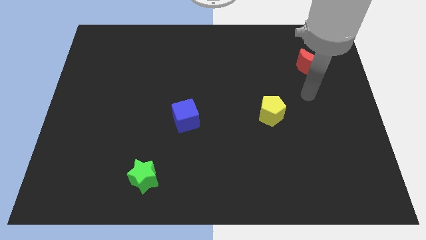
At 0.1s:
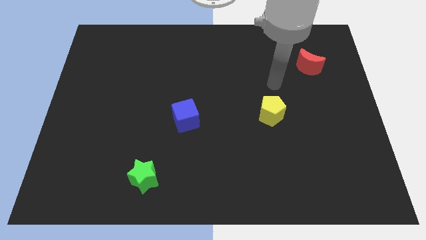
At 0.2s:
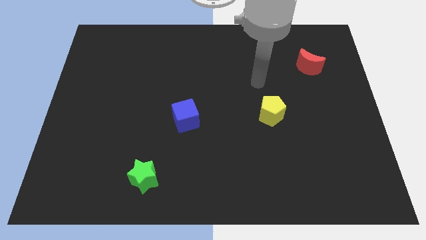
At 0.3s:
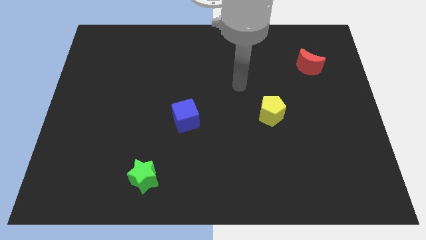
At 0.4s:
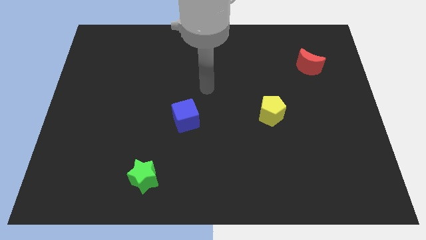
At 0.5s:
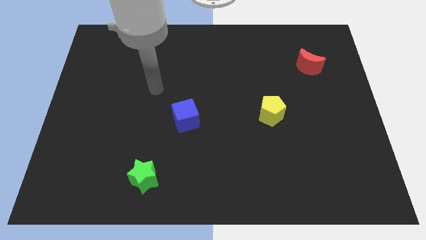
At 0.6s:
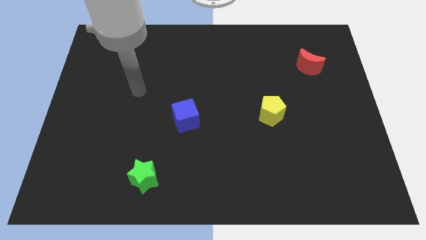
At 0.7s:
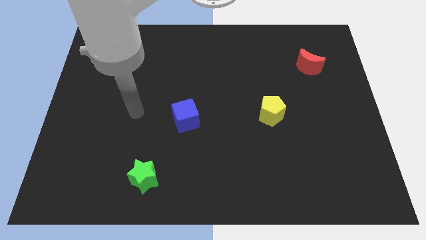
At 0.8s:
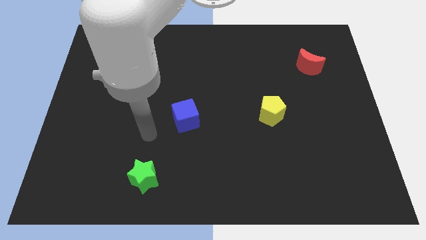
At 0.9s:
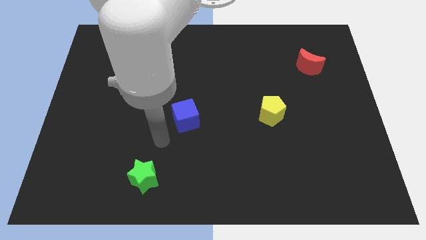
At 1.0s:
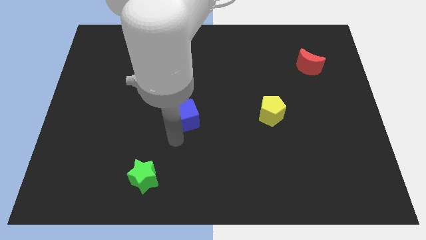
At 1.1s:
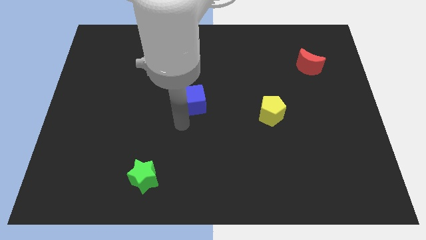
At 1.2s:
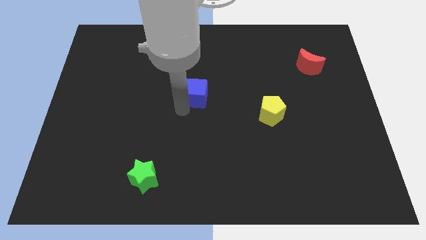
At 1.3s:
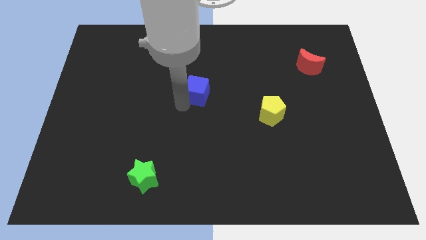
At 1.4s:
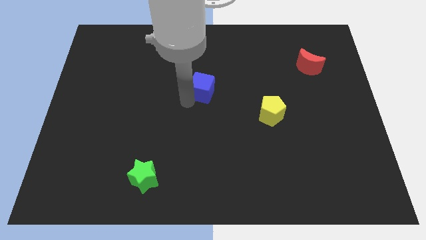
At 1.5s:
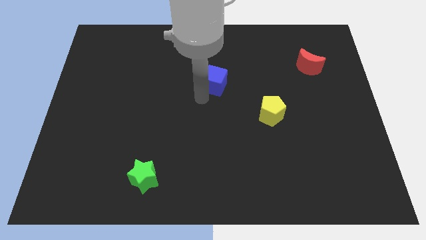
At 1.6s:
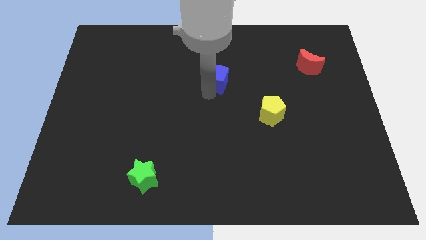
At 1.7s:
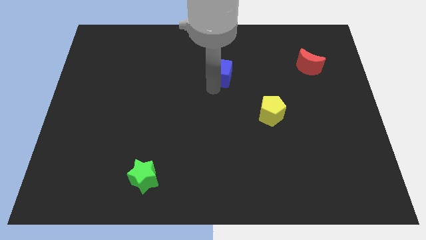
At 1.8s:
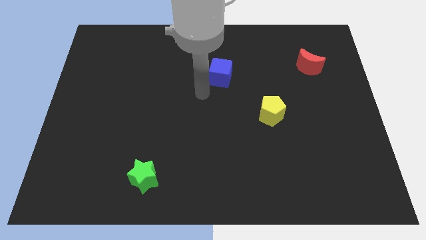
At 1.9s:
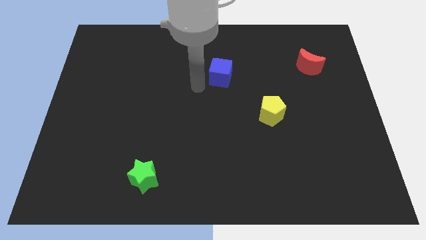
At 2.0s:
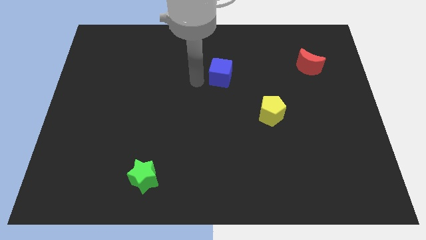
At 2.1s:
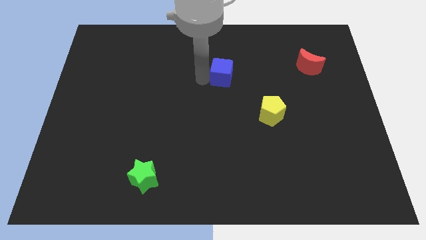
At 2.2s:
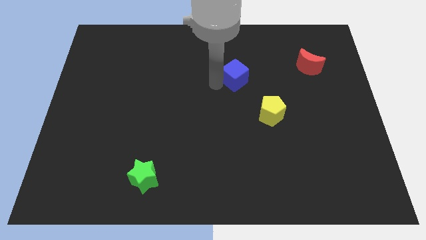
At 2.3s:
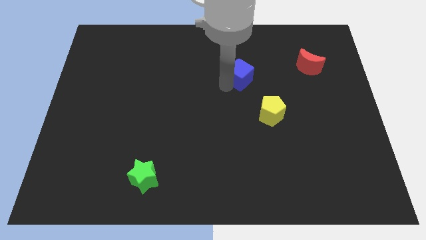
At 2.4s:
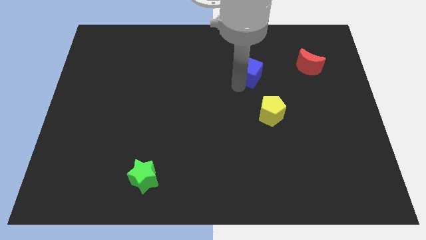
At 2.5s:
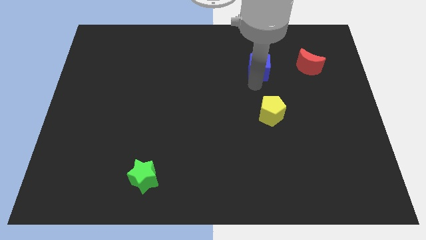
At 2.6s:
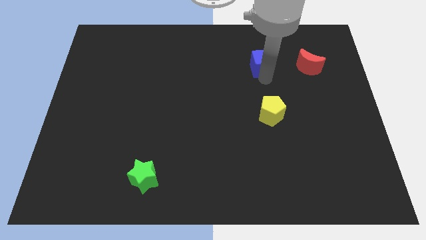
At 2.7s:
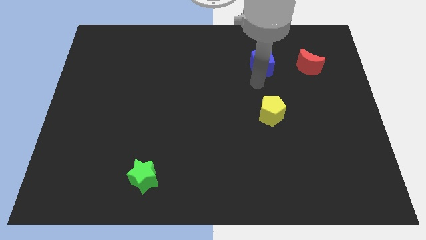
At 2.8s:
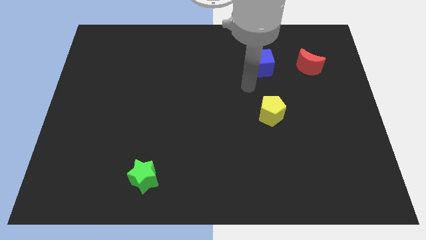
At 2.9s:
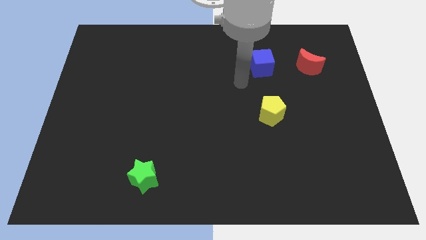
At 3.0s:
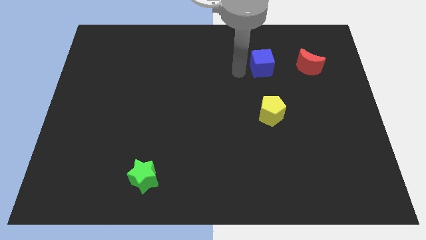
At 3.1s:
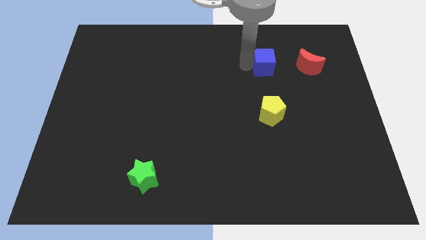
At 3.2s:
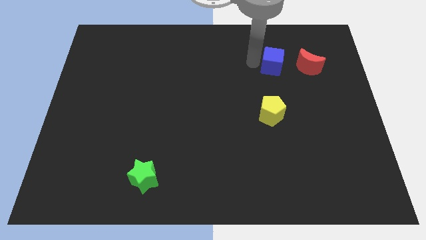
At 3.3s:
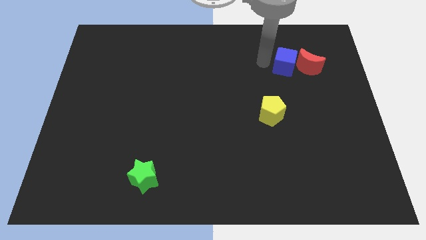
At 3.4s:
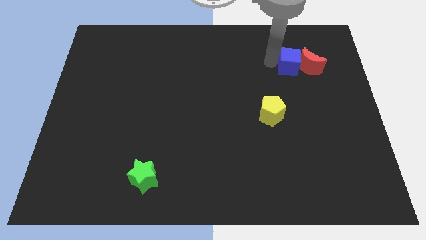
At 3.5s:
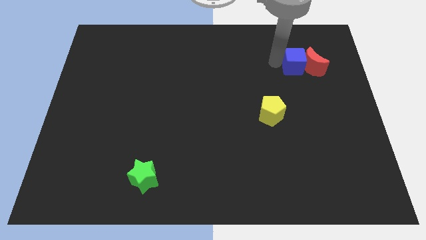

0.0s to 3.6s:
push the blue cube close to the red block

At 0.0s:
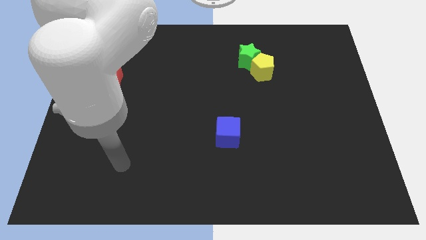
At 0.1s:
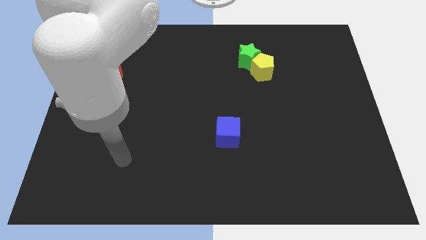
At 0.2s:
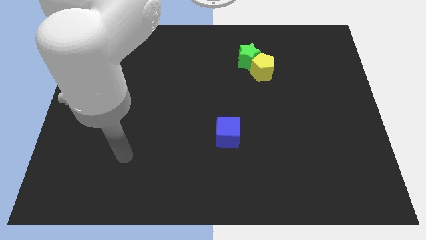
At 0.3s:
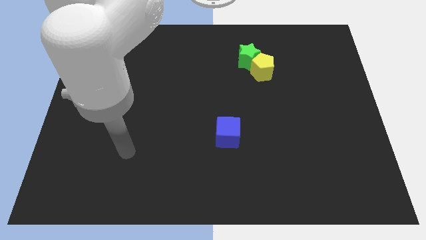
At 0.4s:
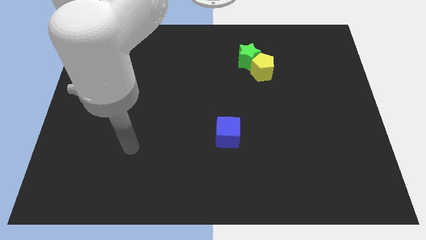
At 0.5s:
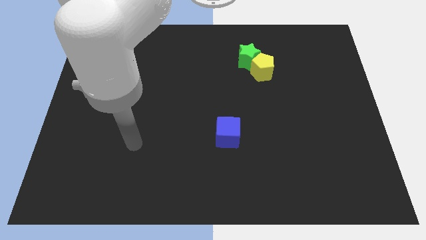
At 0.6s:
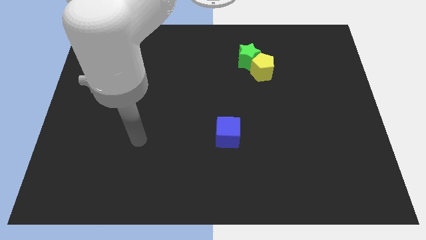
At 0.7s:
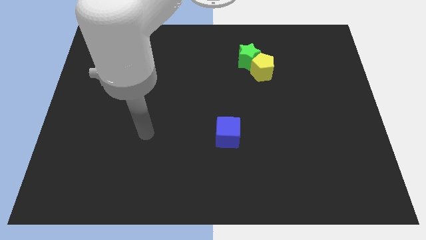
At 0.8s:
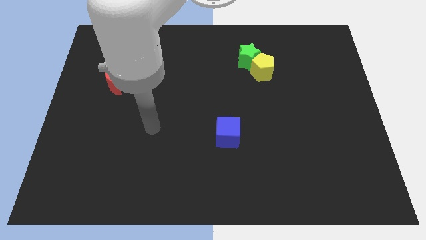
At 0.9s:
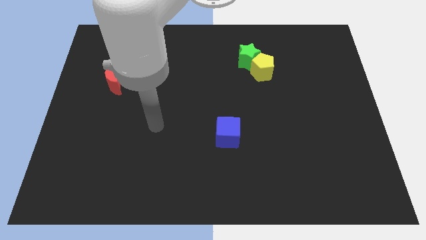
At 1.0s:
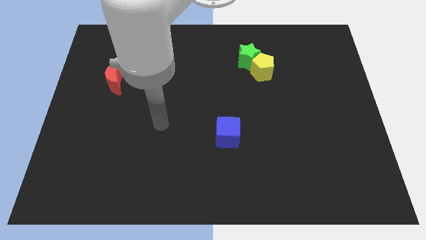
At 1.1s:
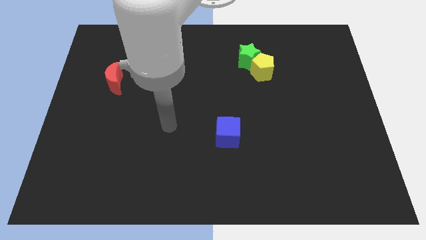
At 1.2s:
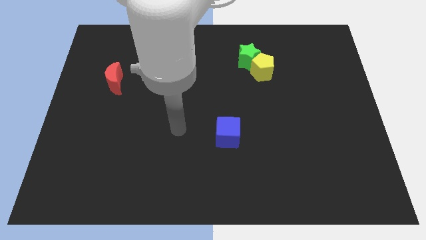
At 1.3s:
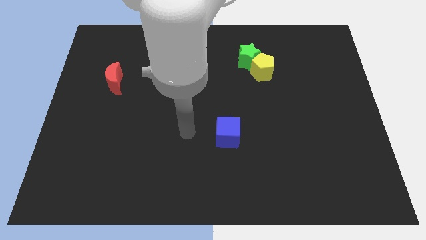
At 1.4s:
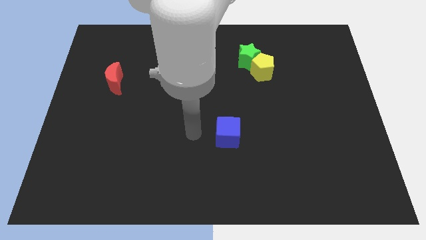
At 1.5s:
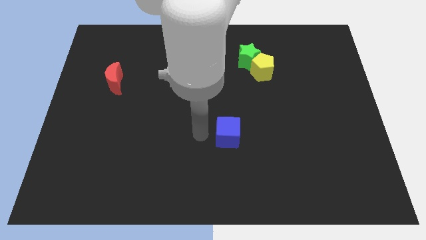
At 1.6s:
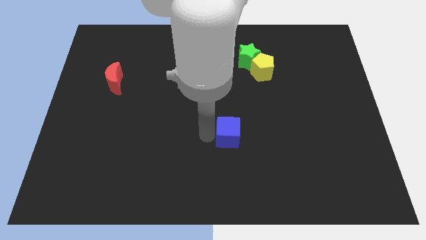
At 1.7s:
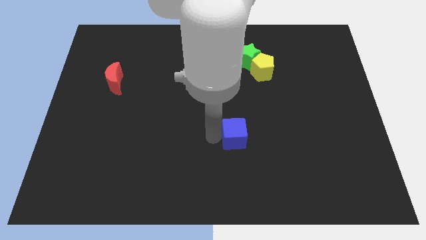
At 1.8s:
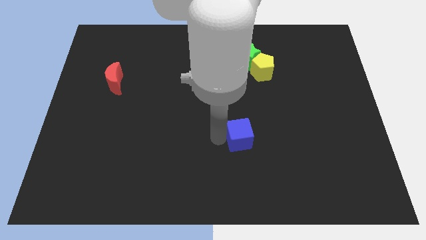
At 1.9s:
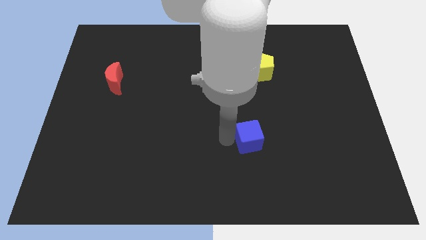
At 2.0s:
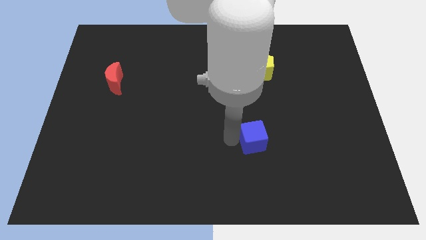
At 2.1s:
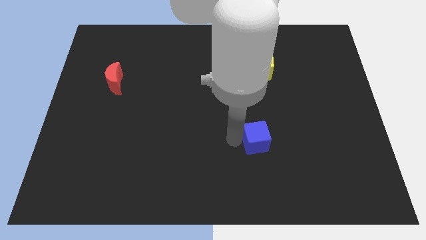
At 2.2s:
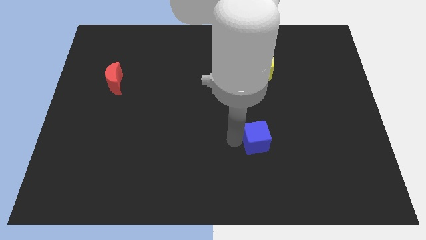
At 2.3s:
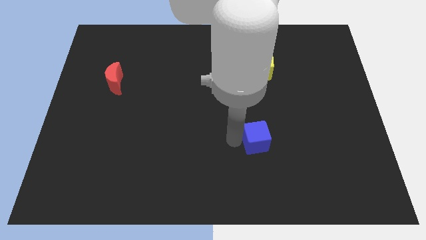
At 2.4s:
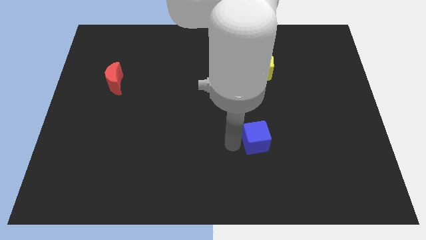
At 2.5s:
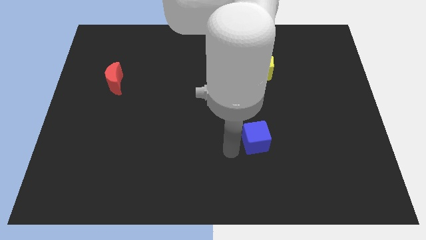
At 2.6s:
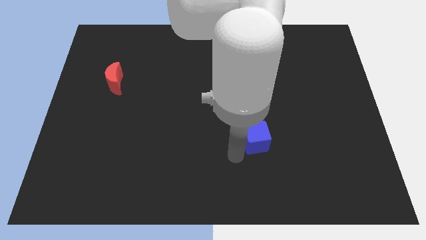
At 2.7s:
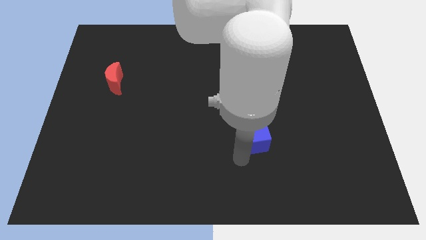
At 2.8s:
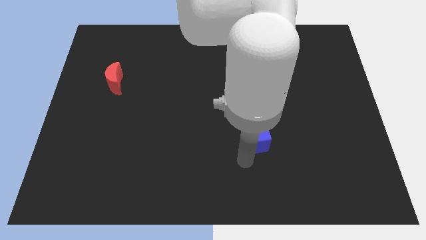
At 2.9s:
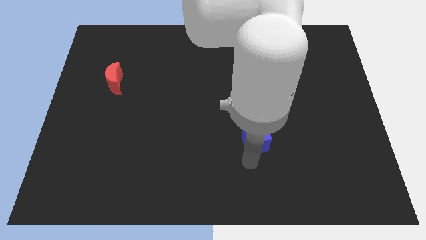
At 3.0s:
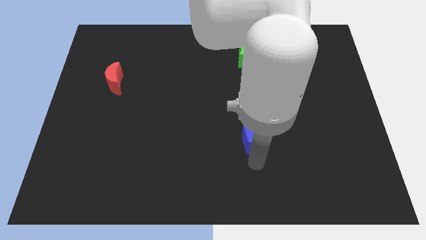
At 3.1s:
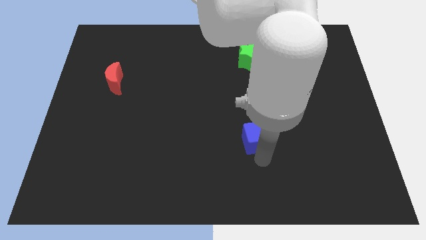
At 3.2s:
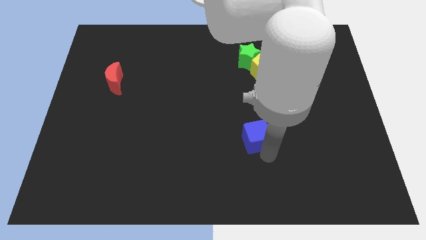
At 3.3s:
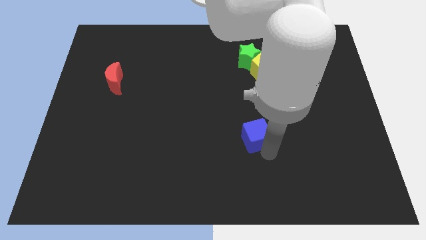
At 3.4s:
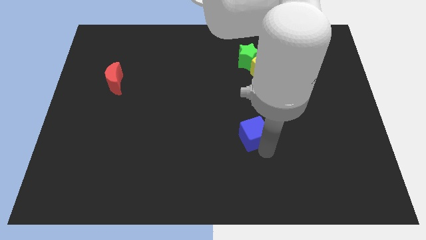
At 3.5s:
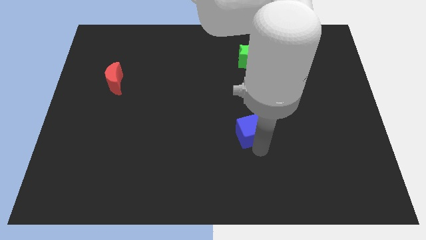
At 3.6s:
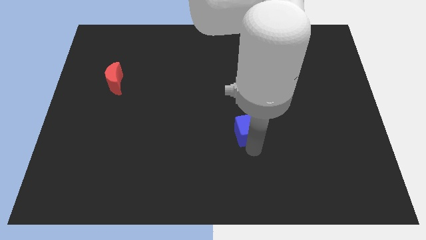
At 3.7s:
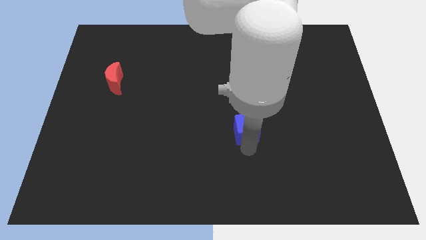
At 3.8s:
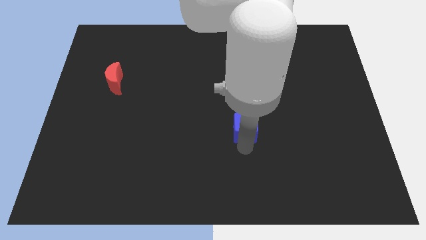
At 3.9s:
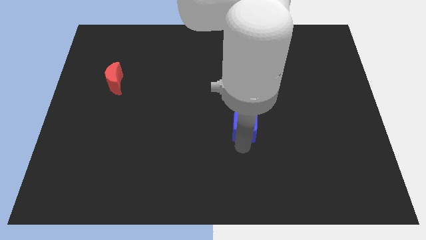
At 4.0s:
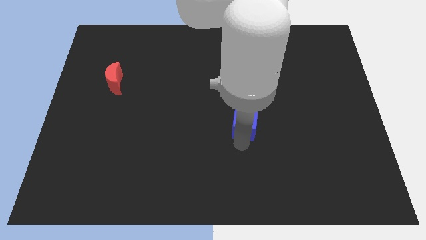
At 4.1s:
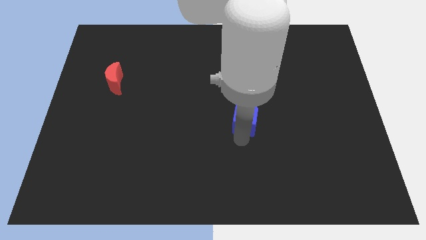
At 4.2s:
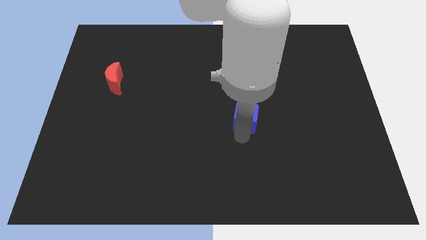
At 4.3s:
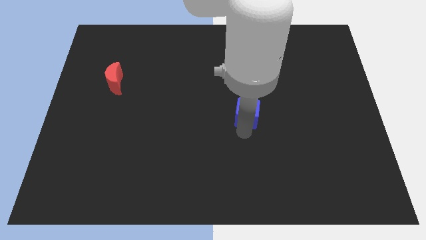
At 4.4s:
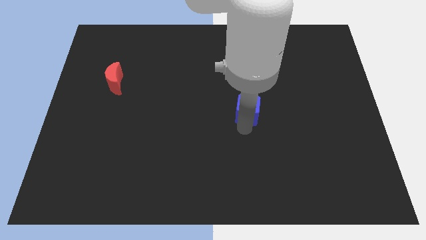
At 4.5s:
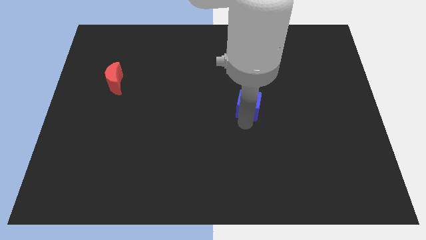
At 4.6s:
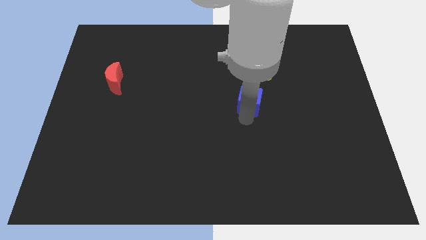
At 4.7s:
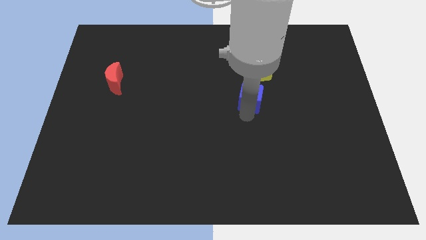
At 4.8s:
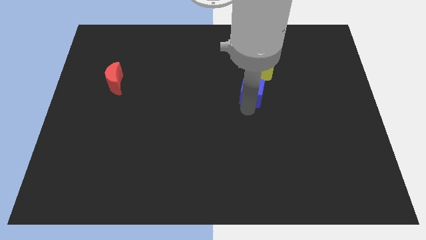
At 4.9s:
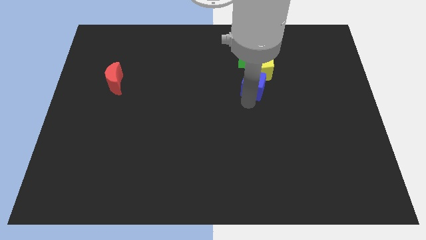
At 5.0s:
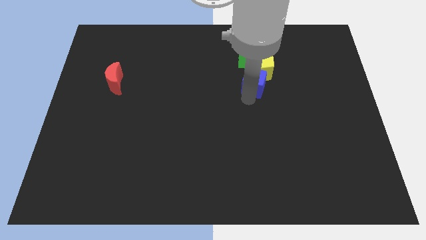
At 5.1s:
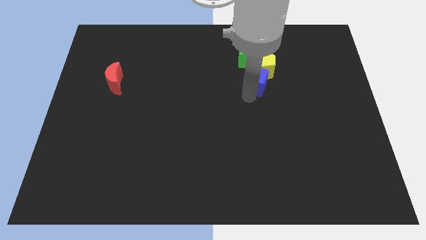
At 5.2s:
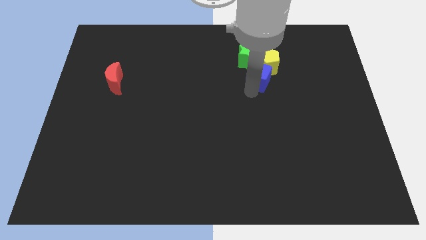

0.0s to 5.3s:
put the cube to the yellow block
